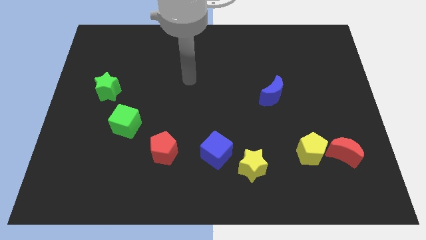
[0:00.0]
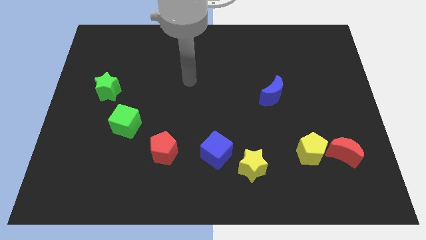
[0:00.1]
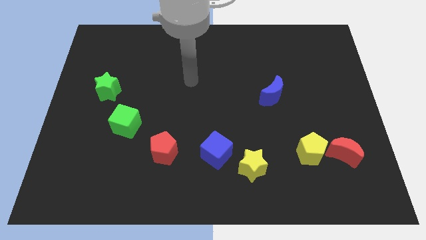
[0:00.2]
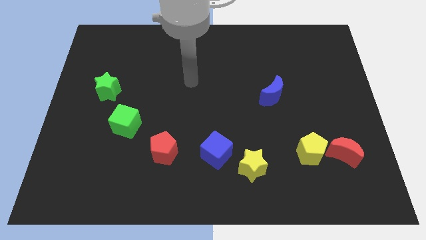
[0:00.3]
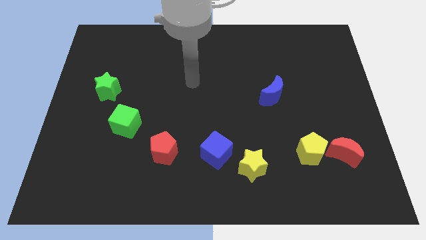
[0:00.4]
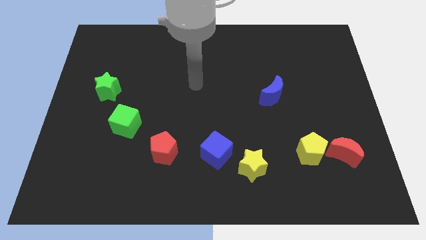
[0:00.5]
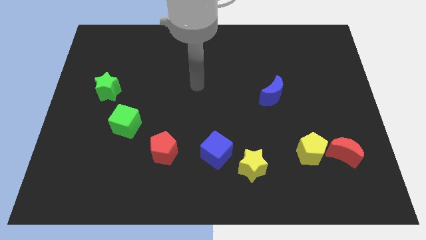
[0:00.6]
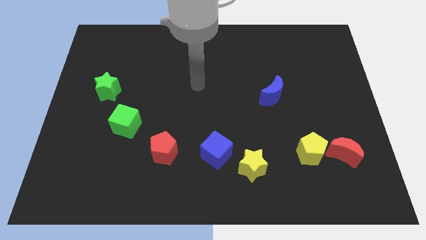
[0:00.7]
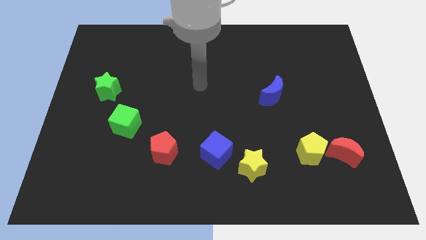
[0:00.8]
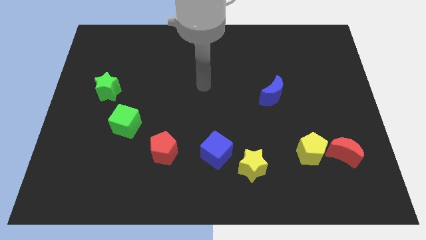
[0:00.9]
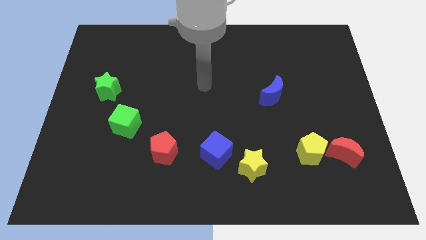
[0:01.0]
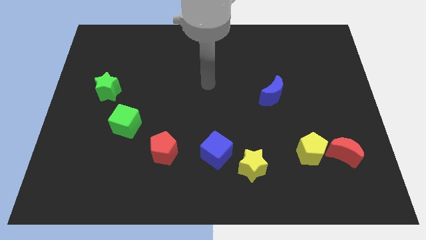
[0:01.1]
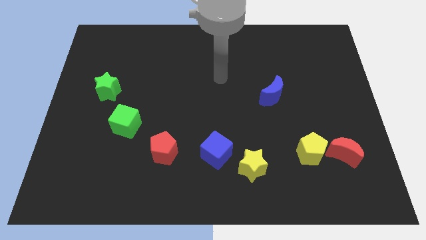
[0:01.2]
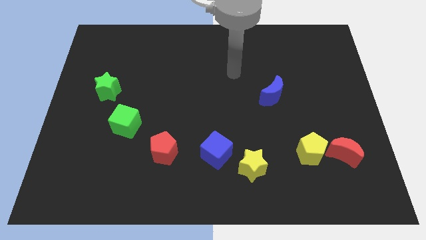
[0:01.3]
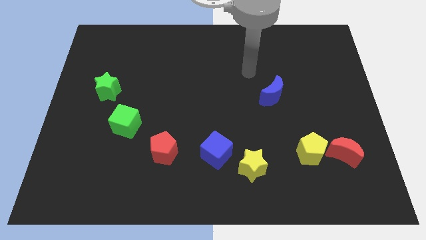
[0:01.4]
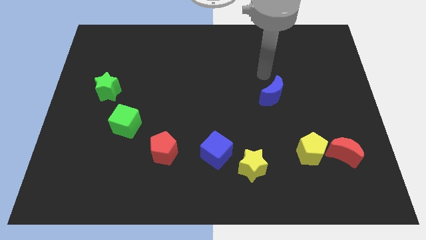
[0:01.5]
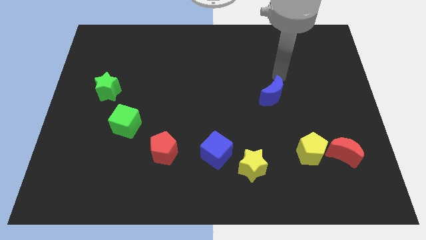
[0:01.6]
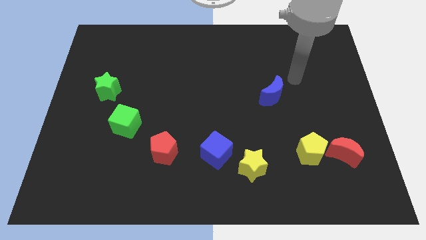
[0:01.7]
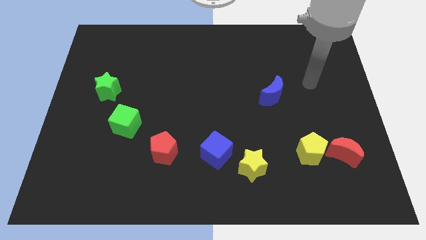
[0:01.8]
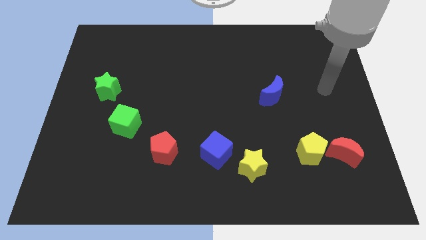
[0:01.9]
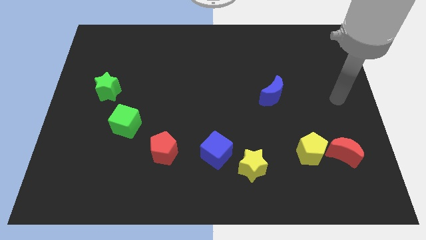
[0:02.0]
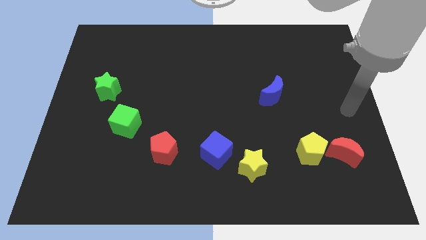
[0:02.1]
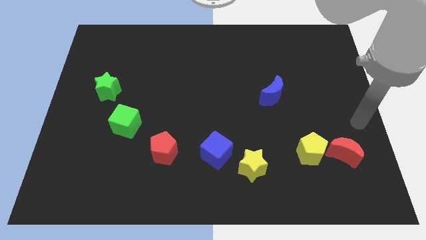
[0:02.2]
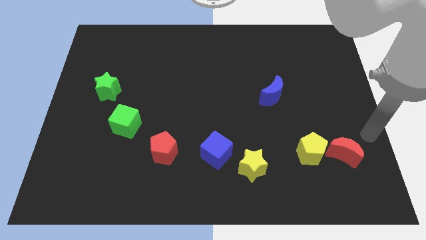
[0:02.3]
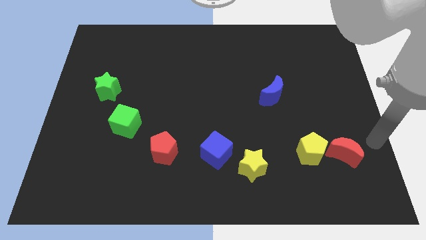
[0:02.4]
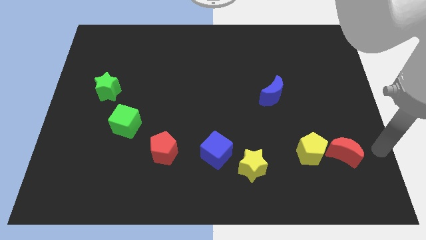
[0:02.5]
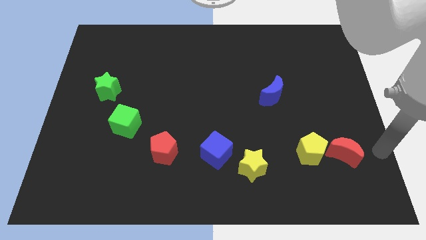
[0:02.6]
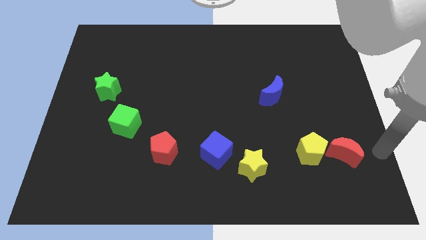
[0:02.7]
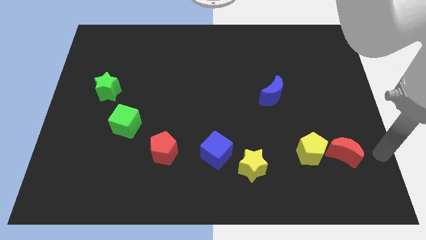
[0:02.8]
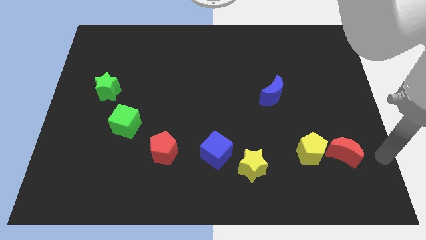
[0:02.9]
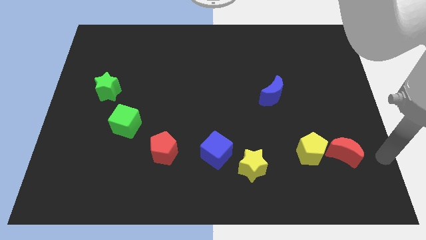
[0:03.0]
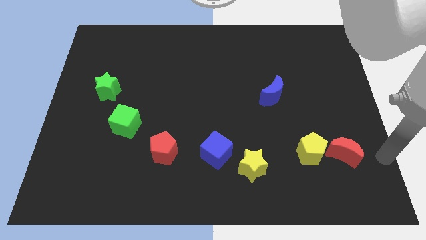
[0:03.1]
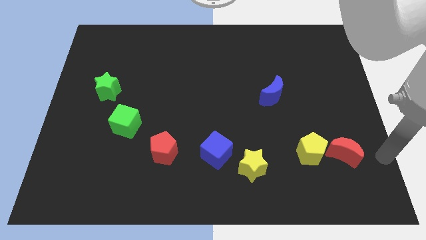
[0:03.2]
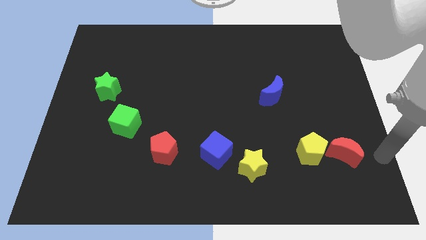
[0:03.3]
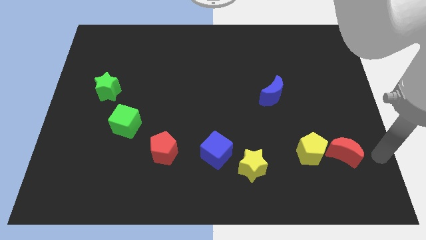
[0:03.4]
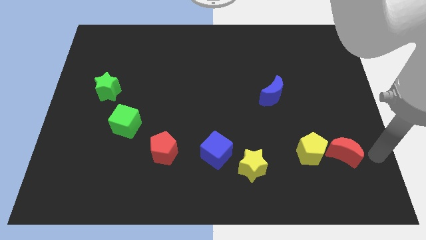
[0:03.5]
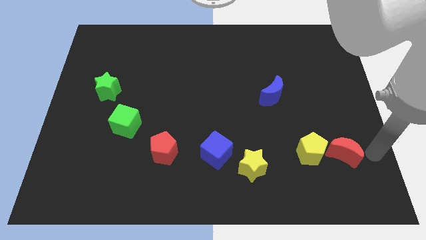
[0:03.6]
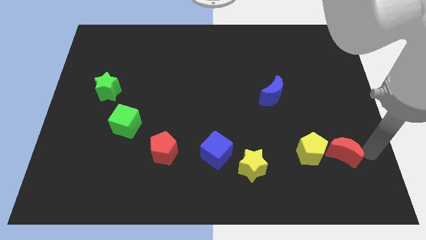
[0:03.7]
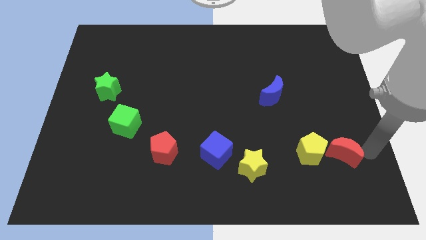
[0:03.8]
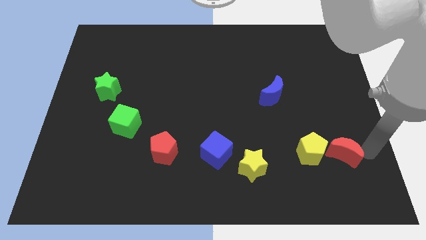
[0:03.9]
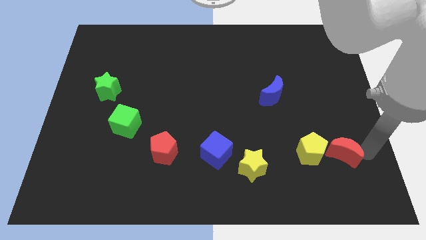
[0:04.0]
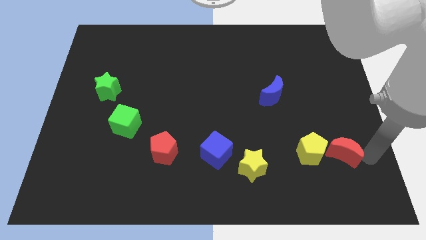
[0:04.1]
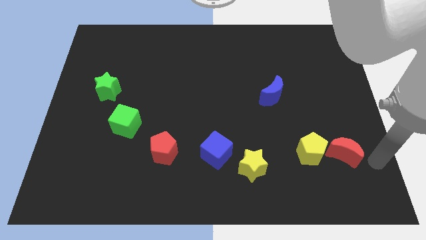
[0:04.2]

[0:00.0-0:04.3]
move your arm to the right of the red crescent

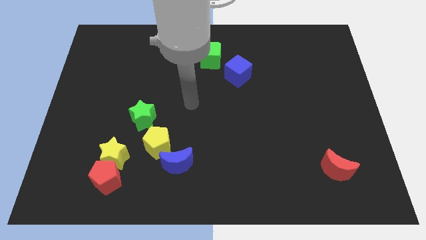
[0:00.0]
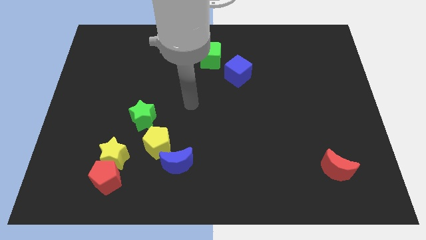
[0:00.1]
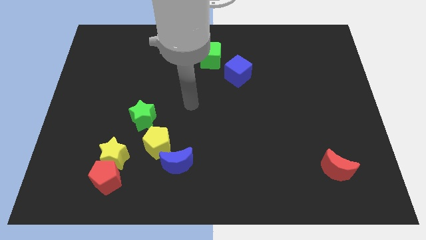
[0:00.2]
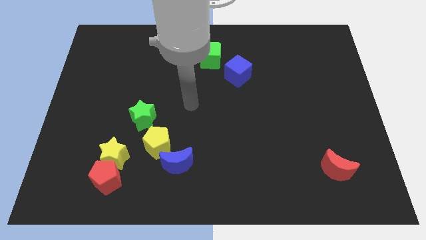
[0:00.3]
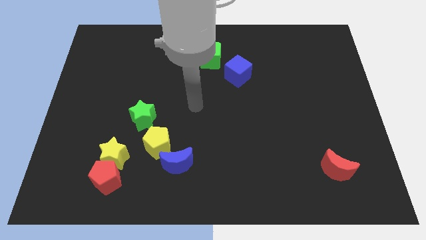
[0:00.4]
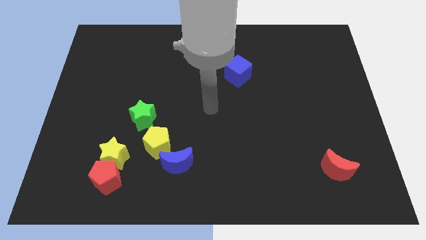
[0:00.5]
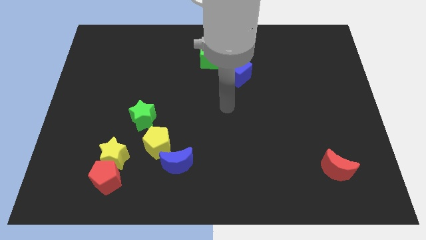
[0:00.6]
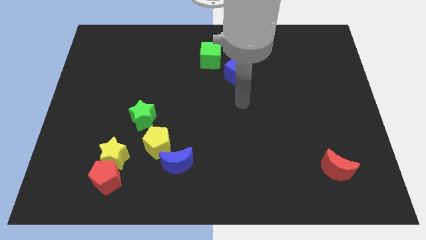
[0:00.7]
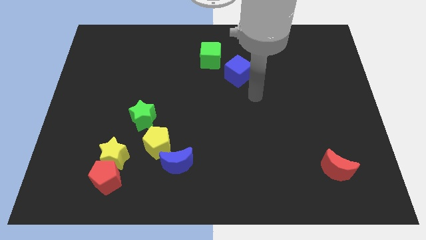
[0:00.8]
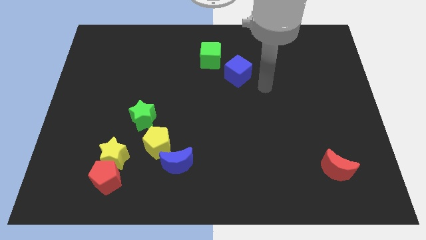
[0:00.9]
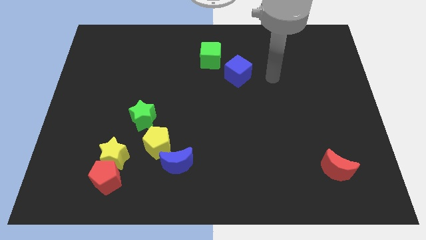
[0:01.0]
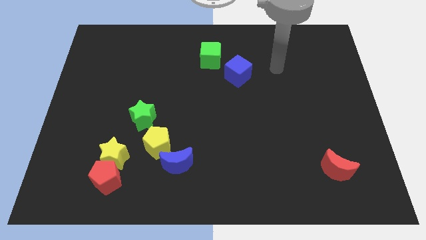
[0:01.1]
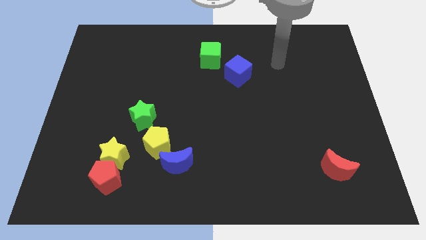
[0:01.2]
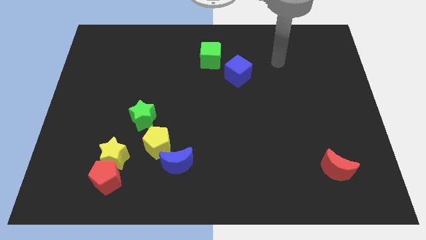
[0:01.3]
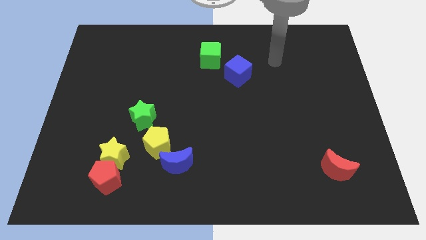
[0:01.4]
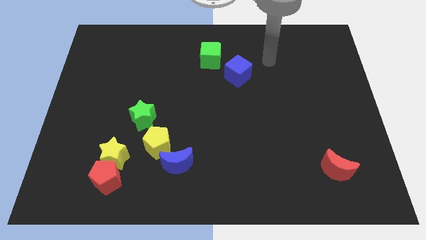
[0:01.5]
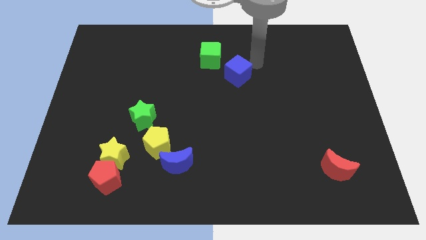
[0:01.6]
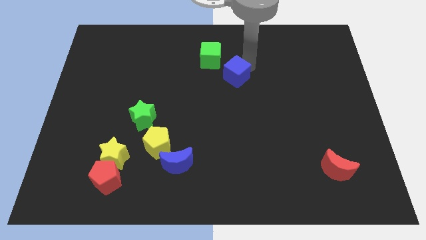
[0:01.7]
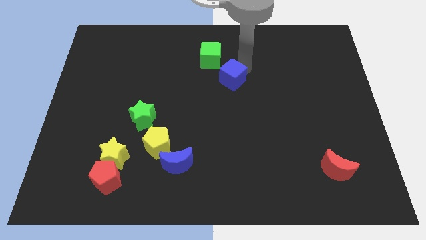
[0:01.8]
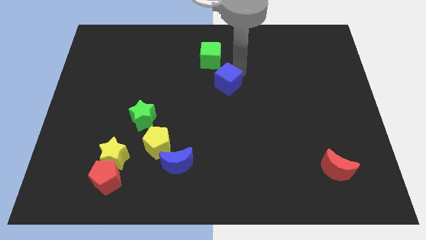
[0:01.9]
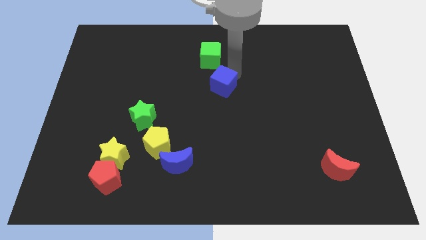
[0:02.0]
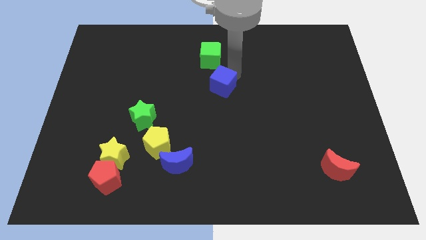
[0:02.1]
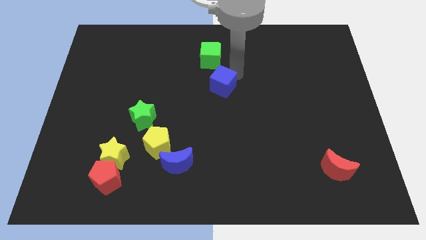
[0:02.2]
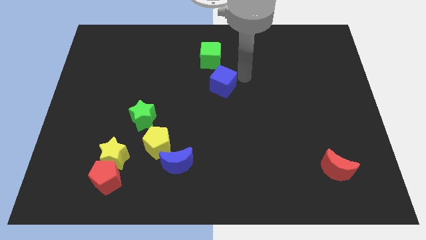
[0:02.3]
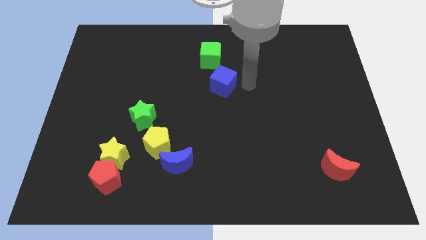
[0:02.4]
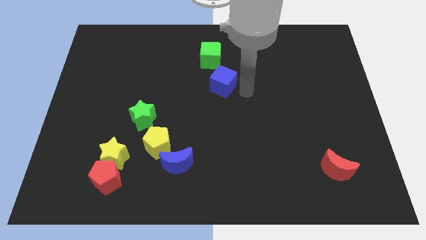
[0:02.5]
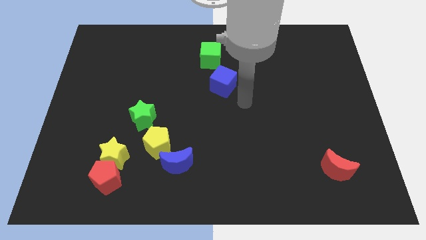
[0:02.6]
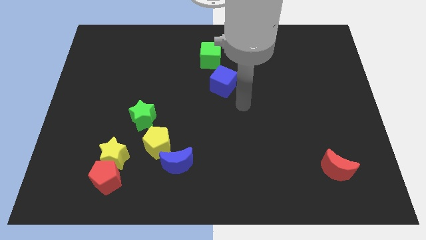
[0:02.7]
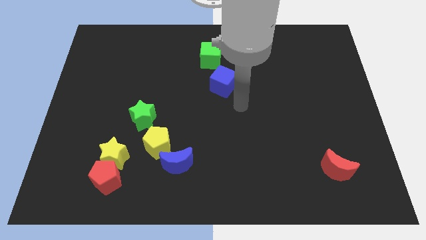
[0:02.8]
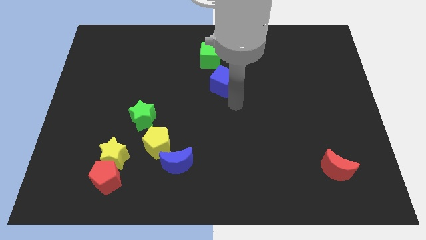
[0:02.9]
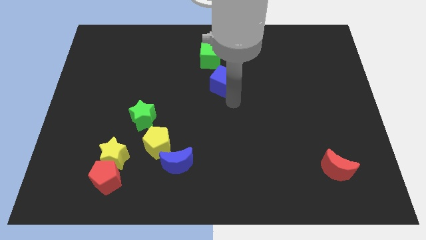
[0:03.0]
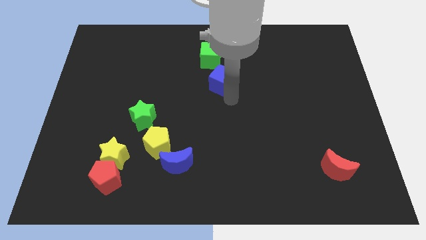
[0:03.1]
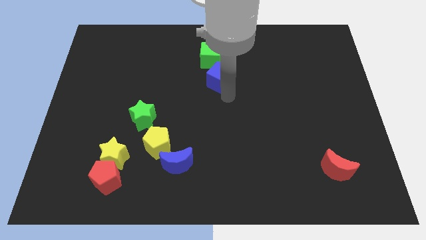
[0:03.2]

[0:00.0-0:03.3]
push the blue cube to the bottom of the green cube

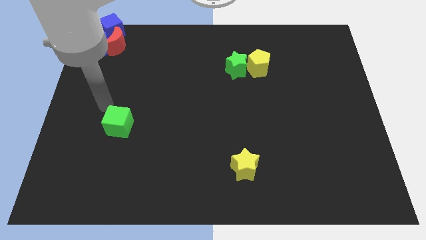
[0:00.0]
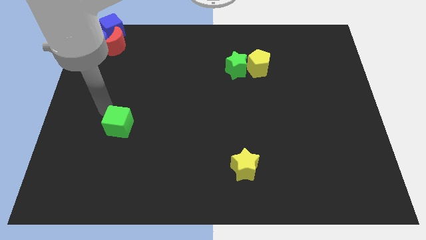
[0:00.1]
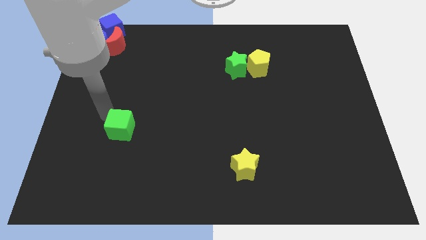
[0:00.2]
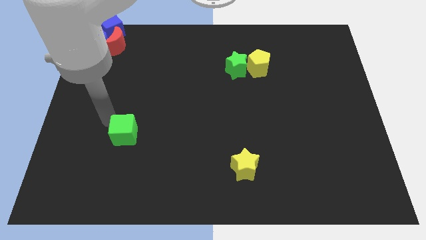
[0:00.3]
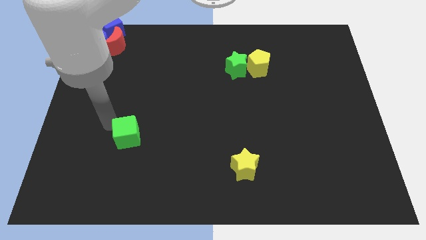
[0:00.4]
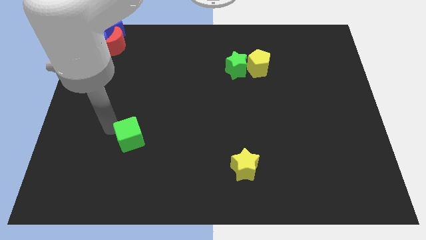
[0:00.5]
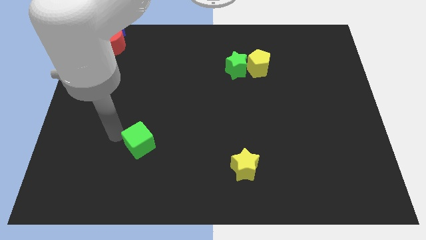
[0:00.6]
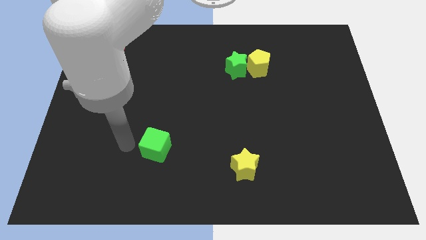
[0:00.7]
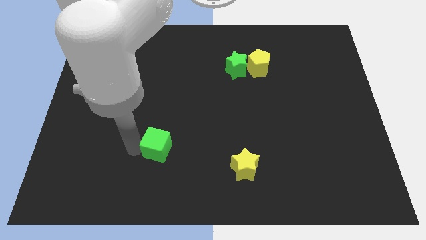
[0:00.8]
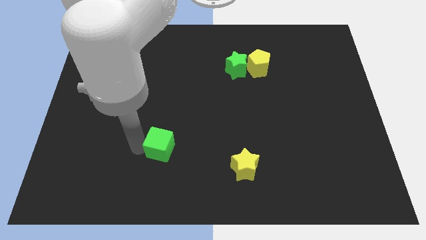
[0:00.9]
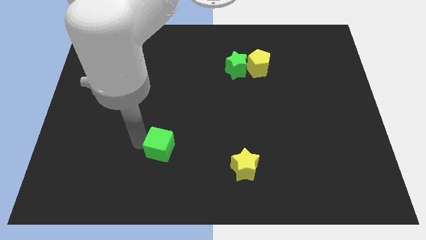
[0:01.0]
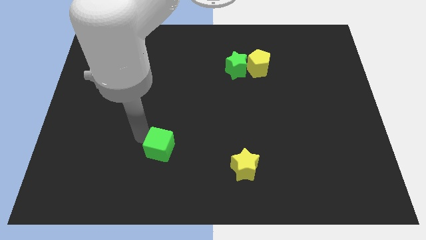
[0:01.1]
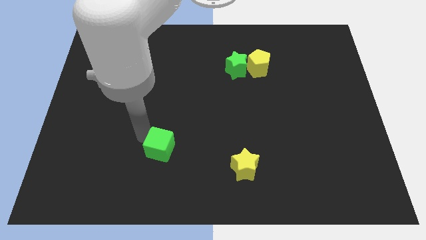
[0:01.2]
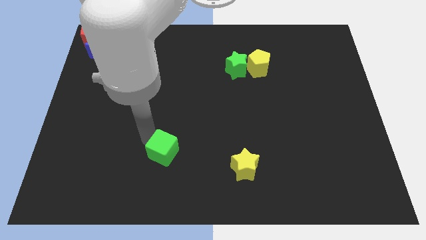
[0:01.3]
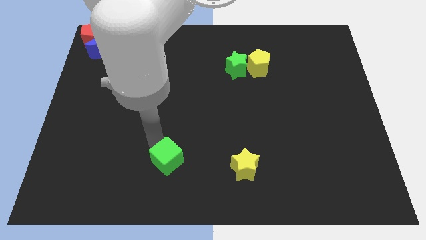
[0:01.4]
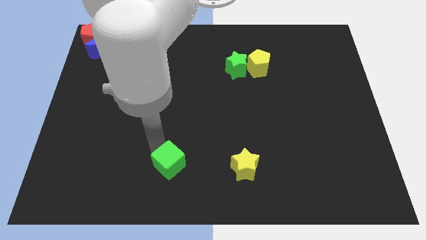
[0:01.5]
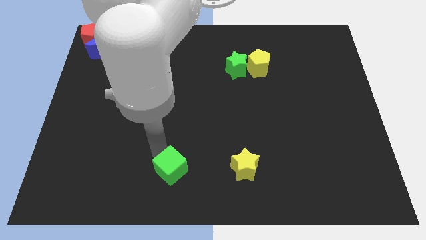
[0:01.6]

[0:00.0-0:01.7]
move the green cube to the left side of the yellow star
